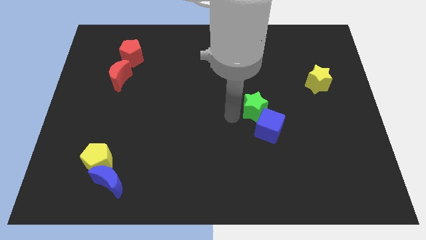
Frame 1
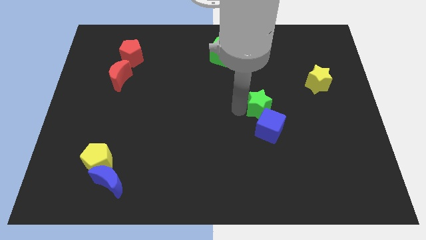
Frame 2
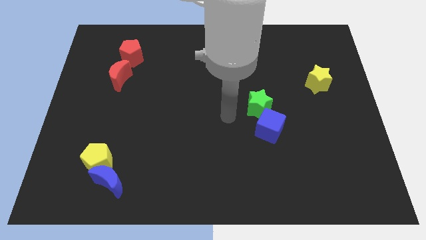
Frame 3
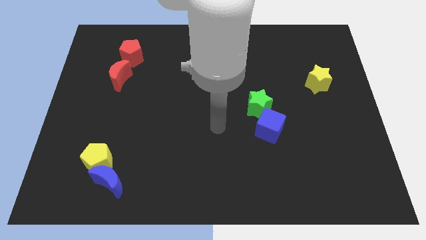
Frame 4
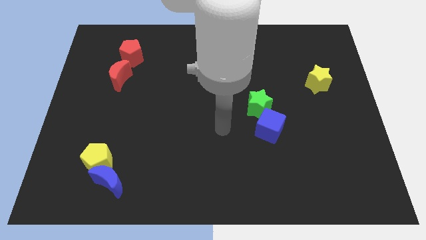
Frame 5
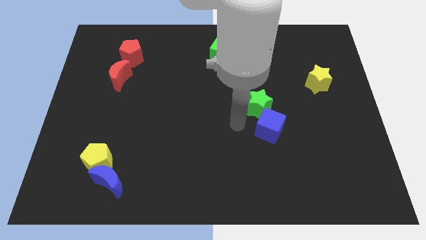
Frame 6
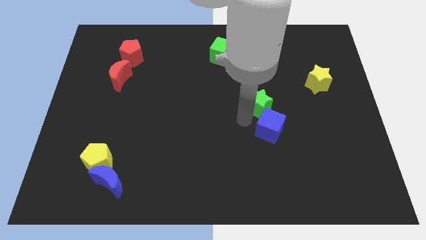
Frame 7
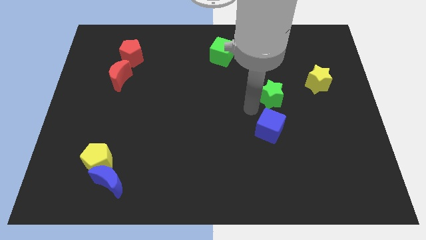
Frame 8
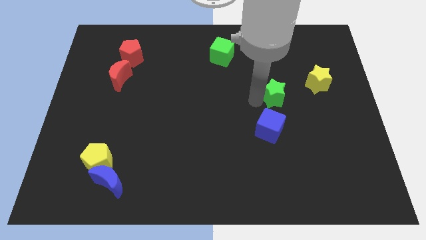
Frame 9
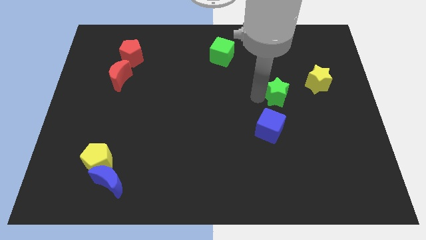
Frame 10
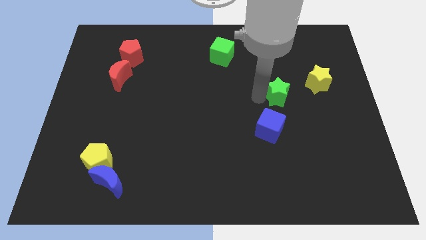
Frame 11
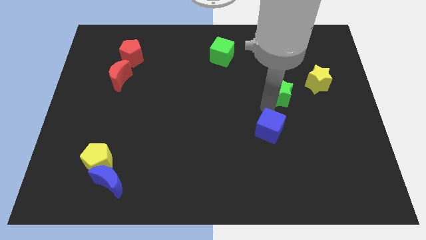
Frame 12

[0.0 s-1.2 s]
place the green star above the blue cube

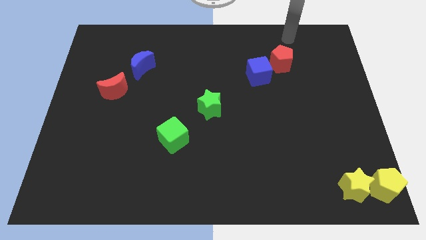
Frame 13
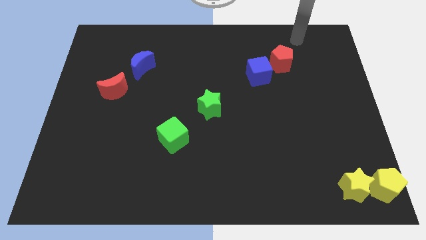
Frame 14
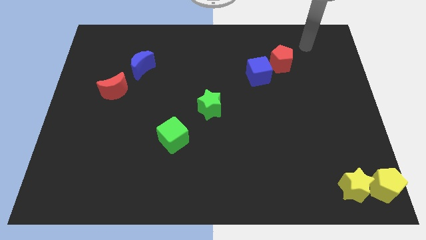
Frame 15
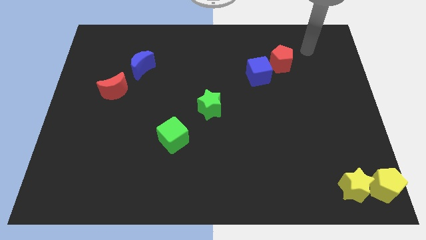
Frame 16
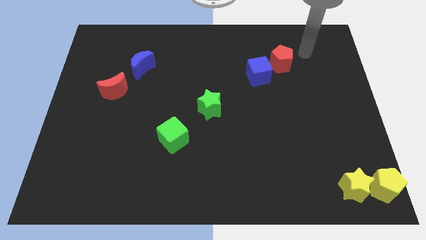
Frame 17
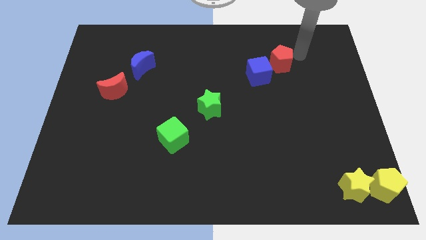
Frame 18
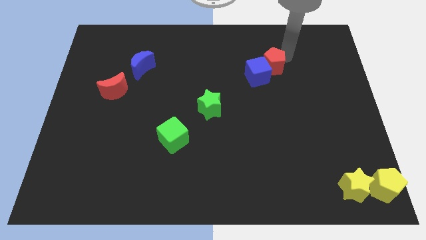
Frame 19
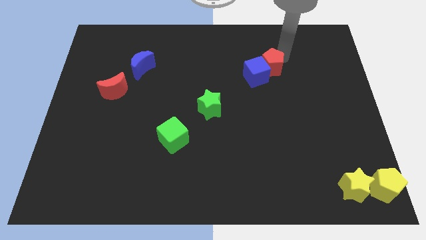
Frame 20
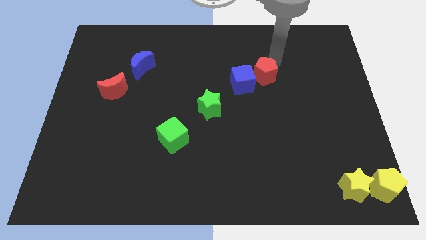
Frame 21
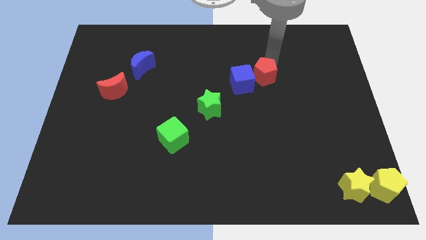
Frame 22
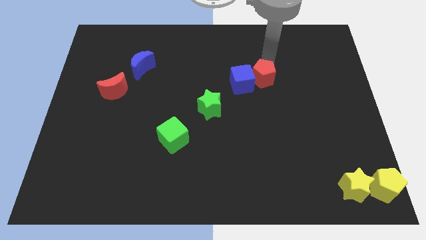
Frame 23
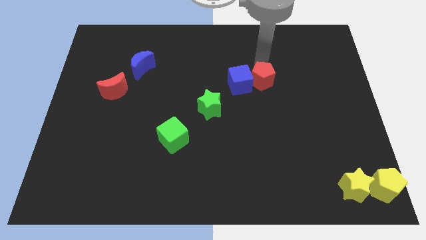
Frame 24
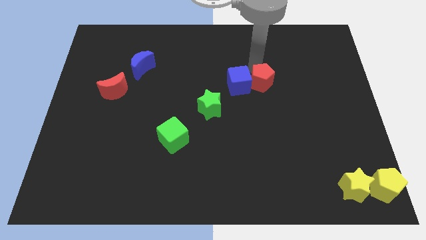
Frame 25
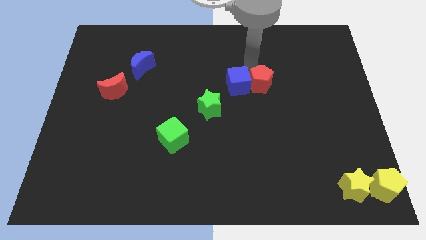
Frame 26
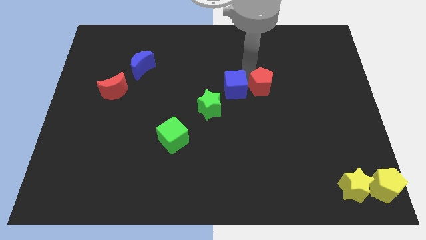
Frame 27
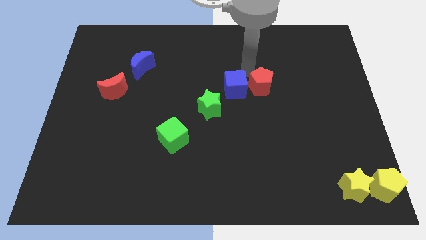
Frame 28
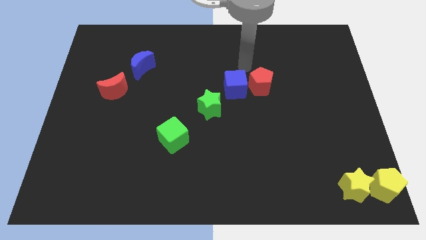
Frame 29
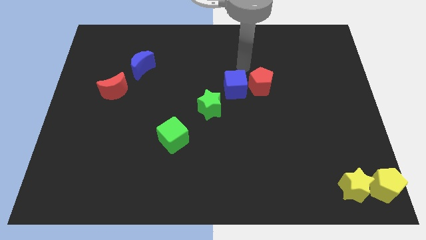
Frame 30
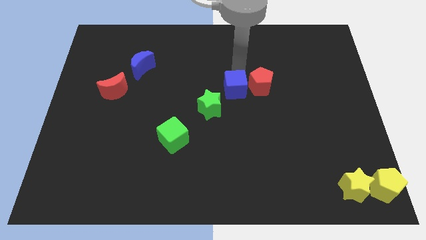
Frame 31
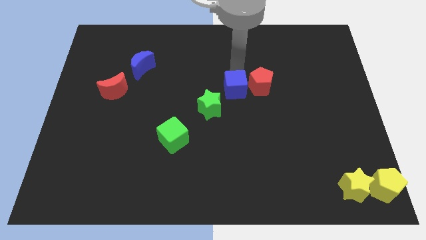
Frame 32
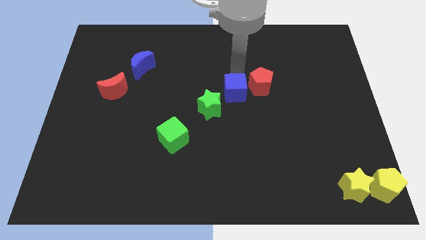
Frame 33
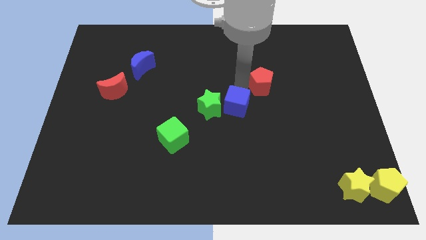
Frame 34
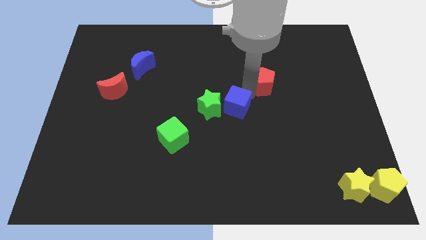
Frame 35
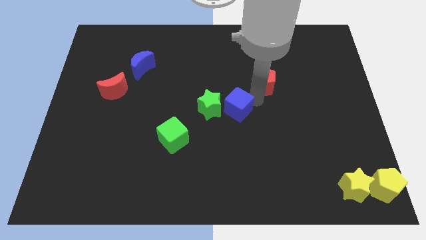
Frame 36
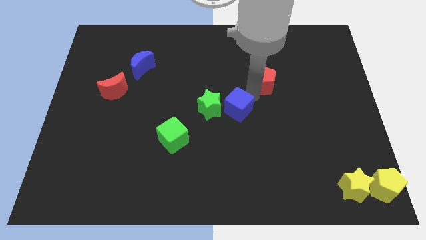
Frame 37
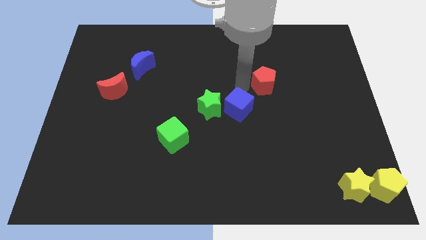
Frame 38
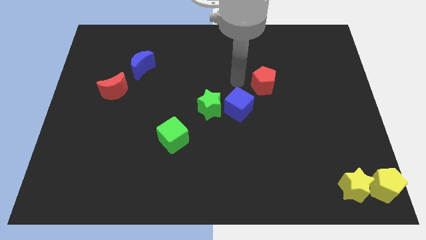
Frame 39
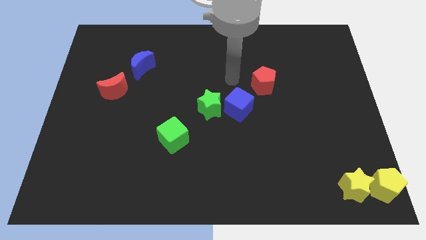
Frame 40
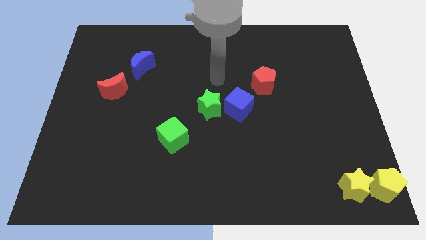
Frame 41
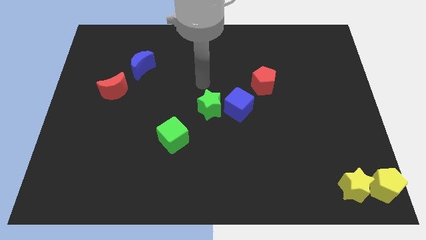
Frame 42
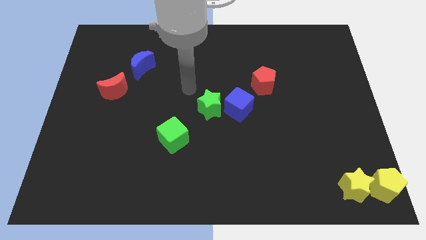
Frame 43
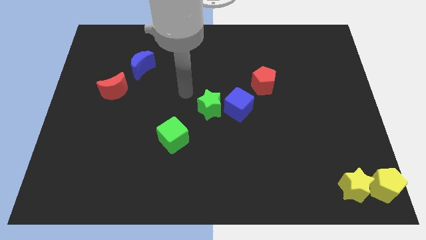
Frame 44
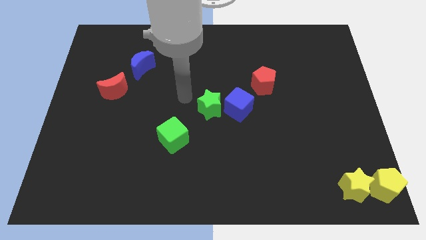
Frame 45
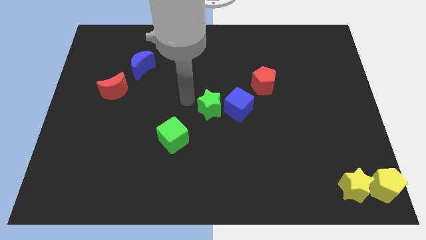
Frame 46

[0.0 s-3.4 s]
separate the red pentagon and the blue cube

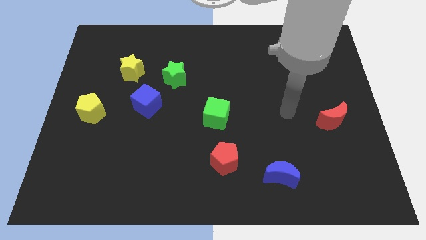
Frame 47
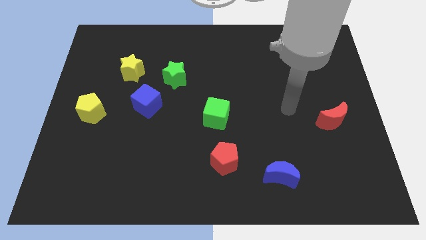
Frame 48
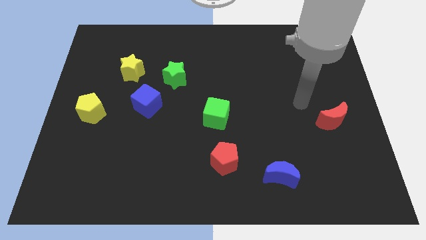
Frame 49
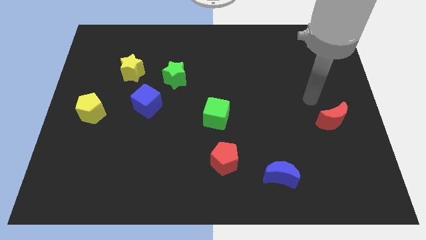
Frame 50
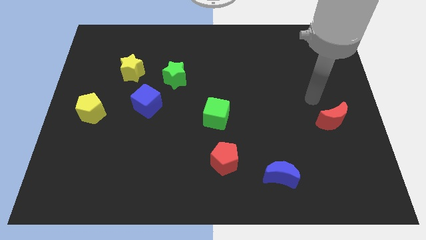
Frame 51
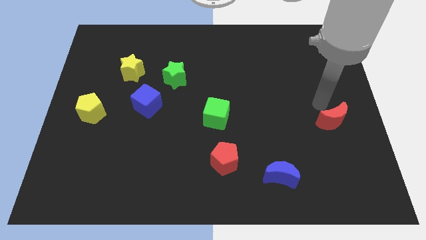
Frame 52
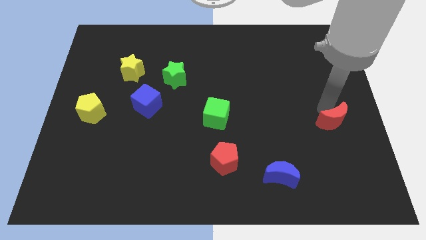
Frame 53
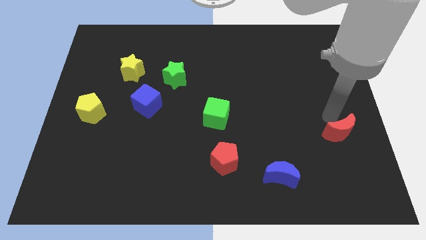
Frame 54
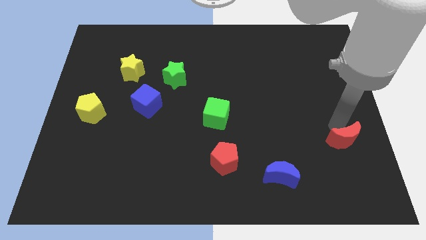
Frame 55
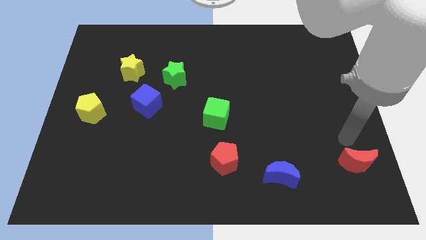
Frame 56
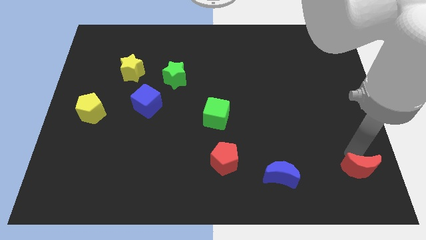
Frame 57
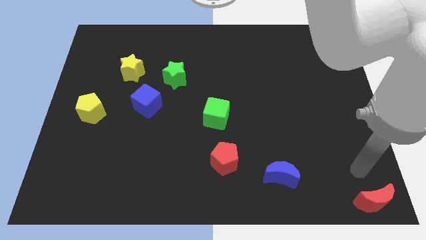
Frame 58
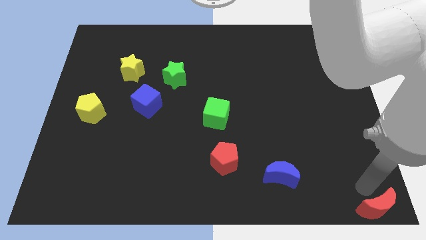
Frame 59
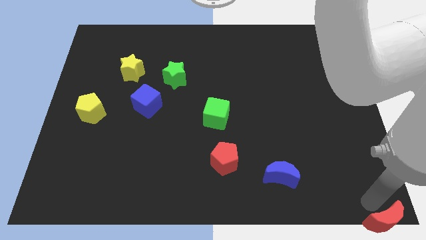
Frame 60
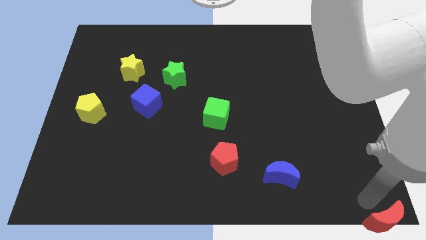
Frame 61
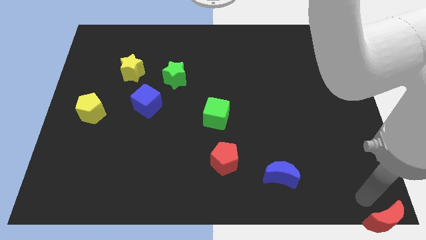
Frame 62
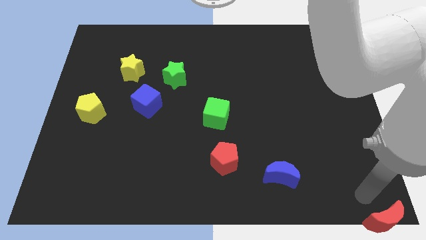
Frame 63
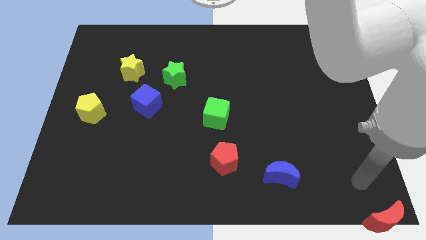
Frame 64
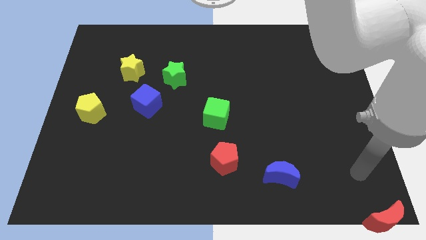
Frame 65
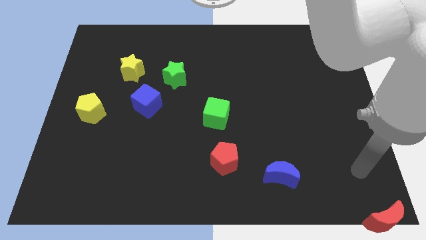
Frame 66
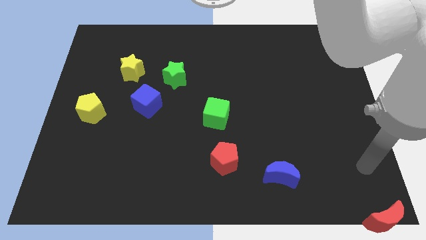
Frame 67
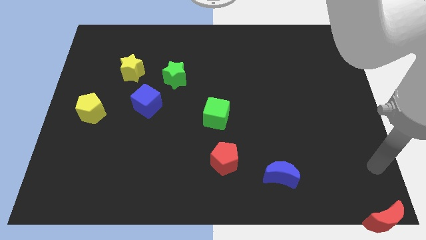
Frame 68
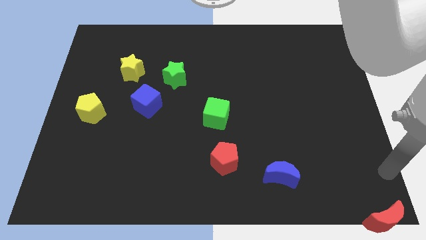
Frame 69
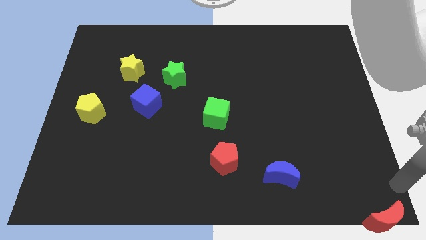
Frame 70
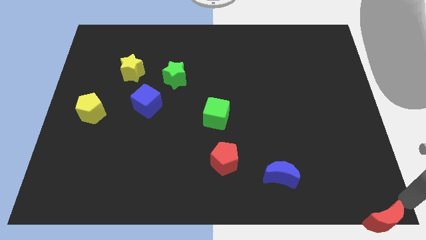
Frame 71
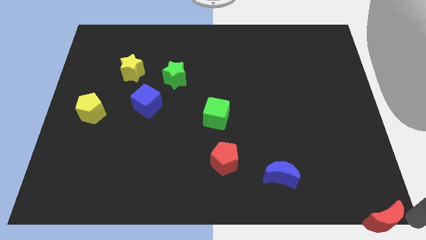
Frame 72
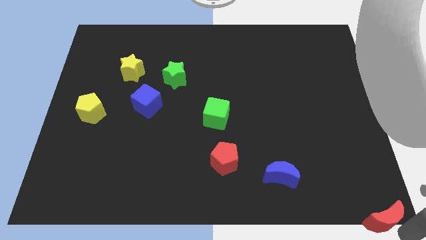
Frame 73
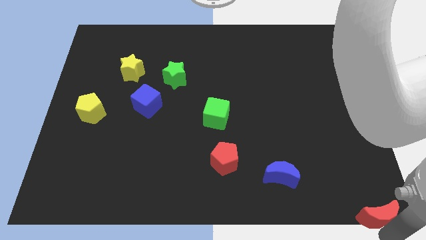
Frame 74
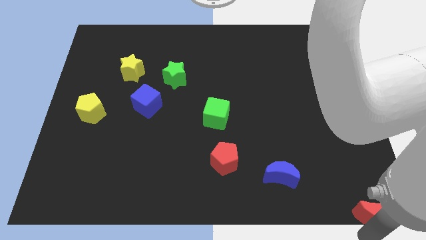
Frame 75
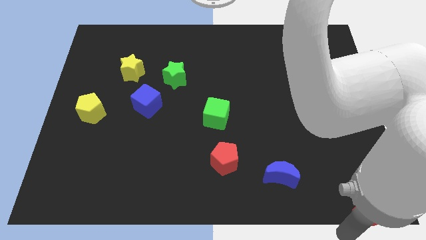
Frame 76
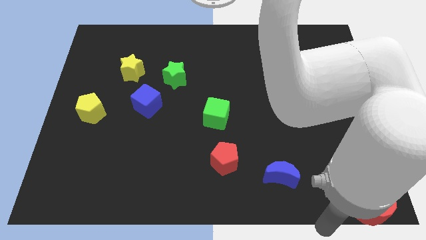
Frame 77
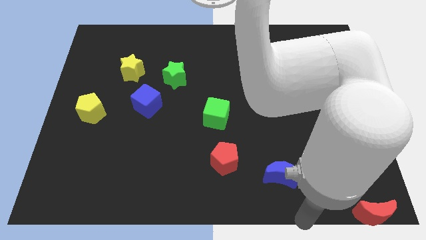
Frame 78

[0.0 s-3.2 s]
place the red crescent at the bottom right corner of the board

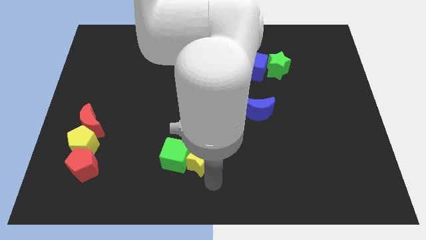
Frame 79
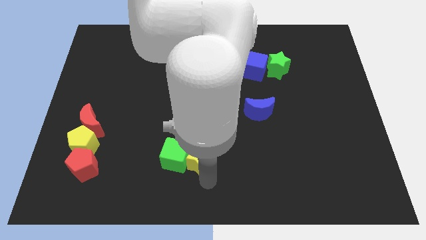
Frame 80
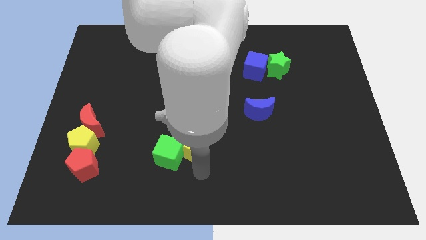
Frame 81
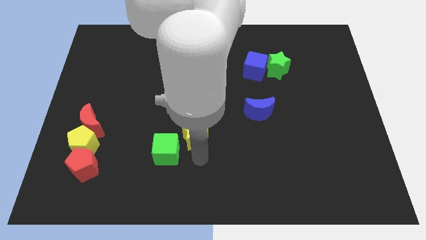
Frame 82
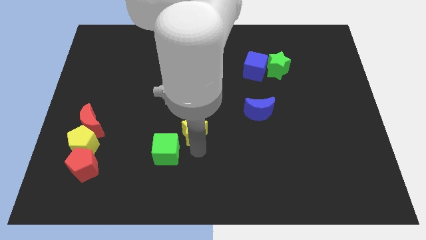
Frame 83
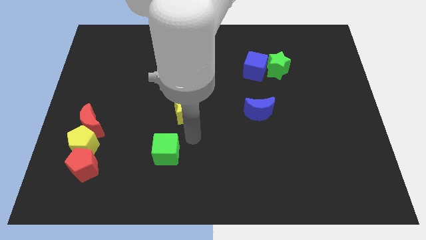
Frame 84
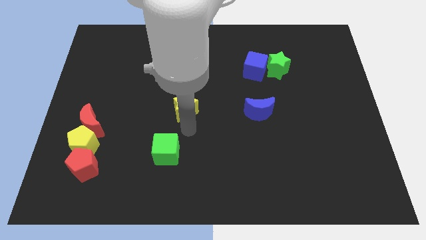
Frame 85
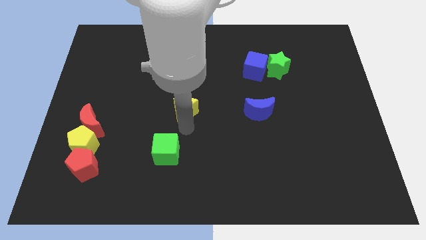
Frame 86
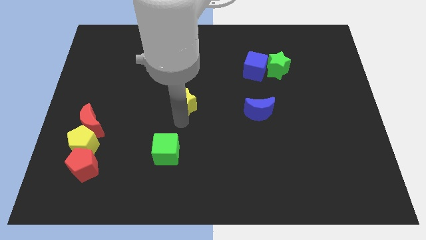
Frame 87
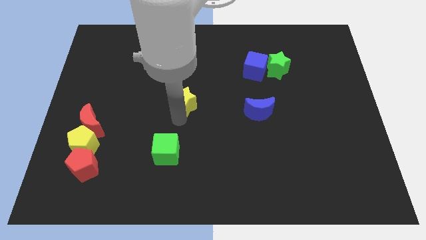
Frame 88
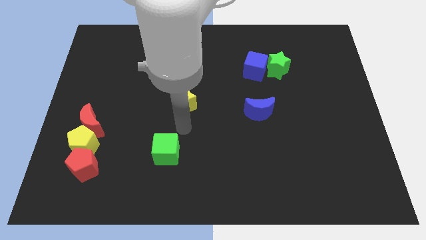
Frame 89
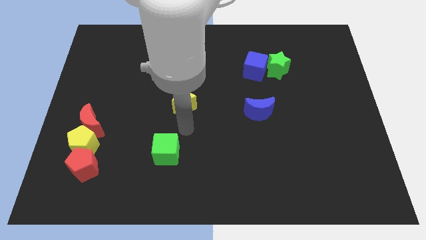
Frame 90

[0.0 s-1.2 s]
separate the yellow star from green cube
